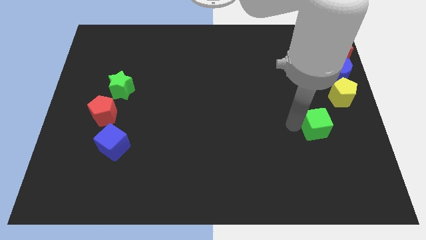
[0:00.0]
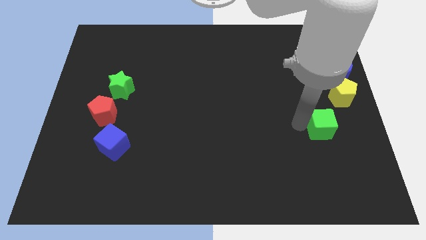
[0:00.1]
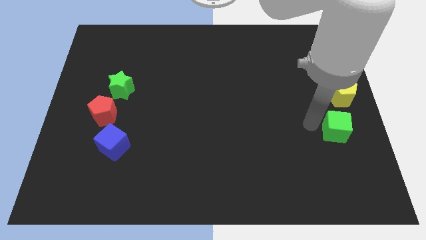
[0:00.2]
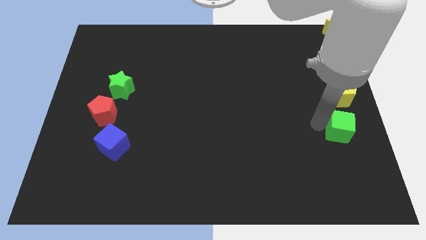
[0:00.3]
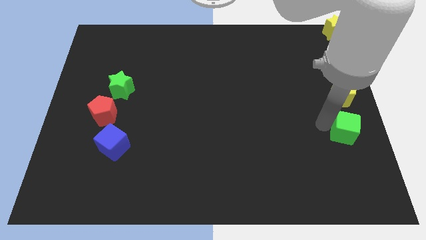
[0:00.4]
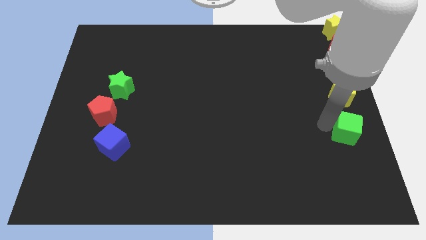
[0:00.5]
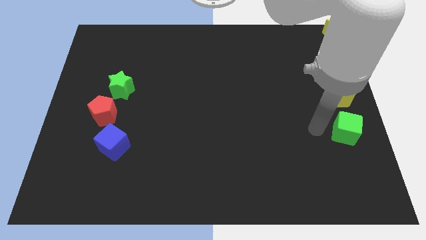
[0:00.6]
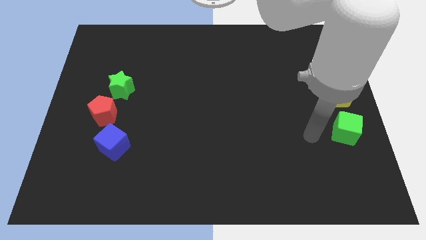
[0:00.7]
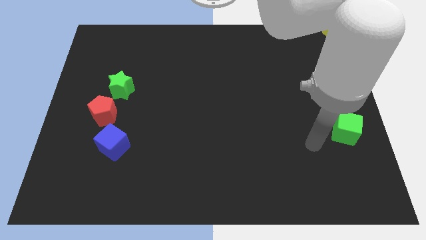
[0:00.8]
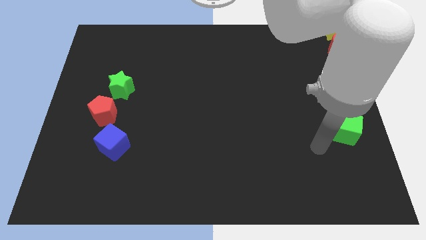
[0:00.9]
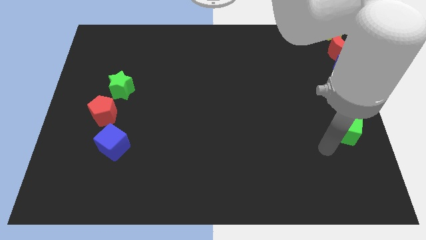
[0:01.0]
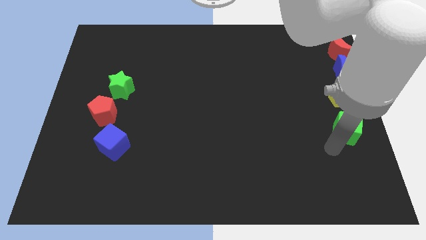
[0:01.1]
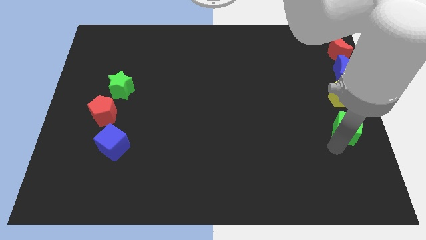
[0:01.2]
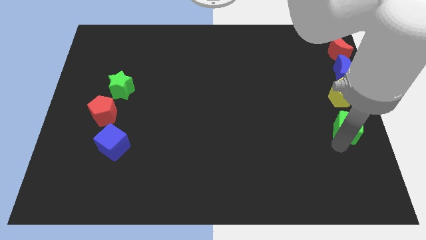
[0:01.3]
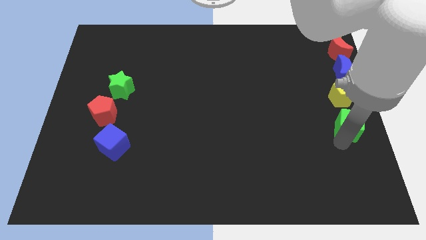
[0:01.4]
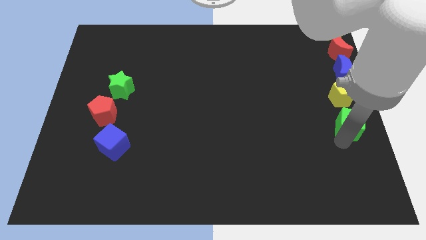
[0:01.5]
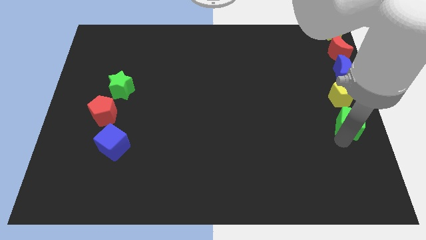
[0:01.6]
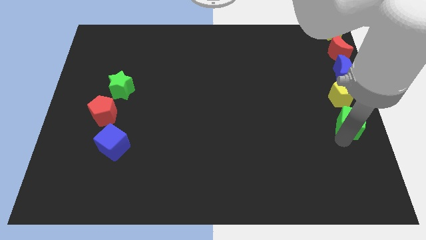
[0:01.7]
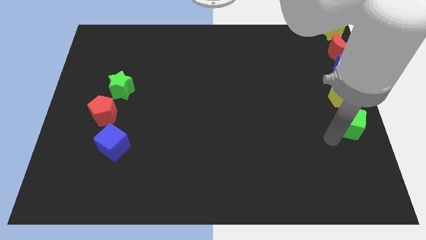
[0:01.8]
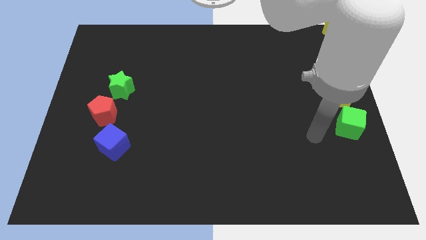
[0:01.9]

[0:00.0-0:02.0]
move the green cube below the yellow pentagon

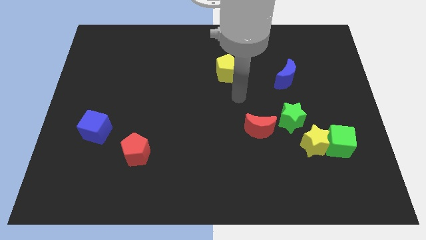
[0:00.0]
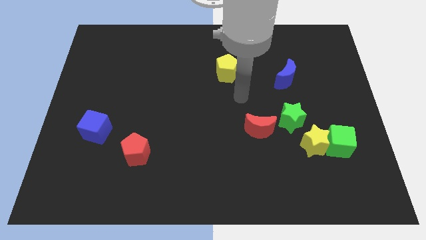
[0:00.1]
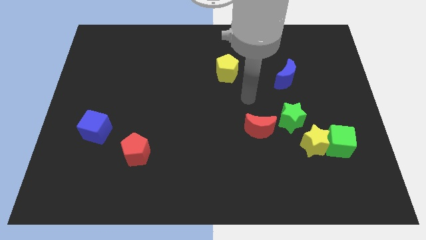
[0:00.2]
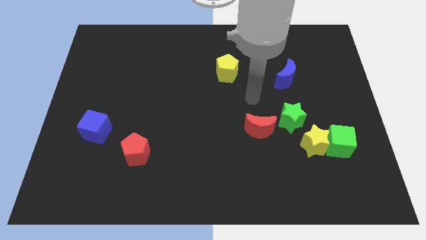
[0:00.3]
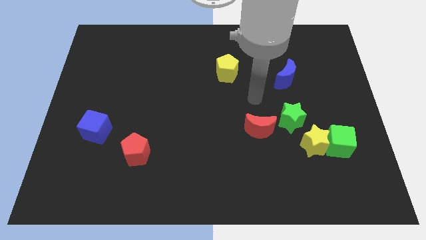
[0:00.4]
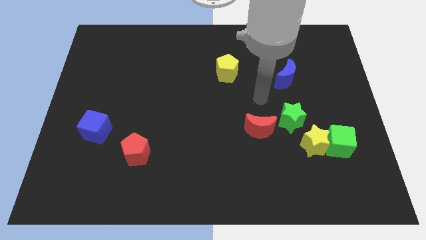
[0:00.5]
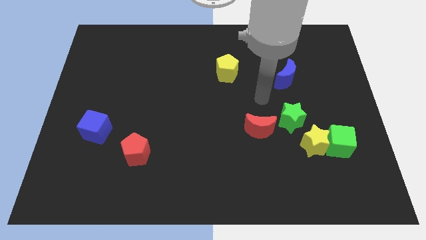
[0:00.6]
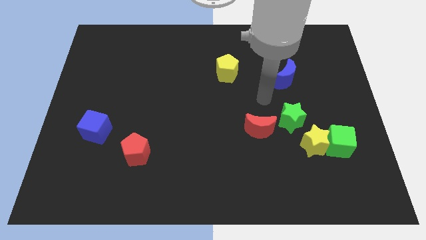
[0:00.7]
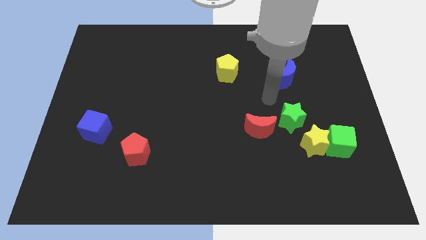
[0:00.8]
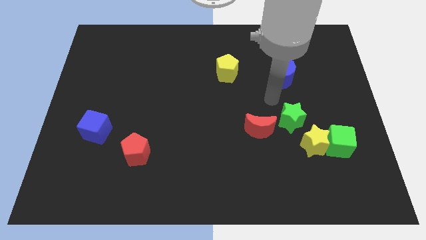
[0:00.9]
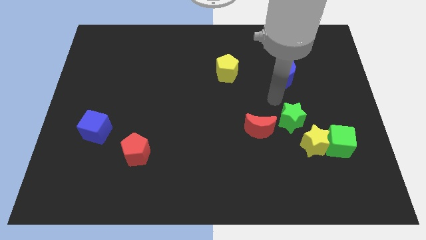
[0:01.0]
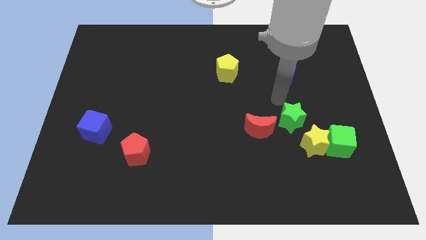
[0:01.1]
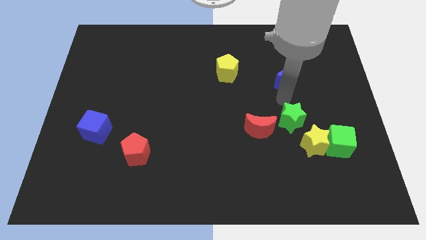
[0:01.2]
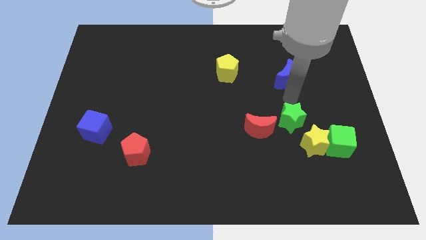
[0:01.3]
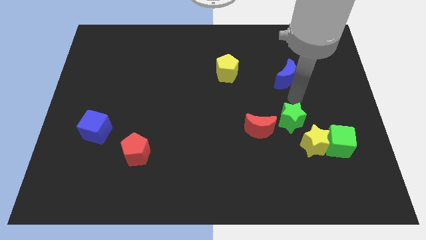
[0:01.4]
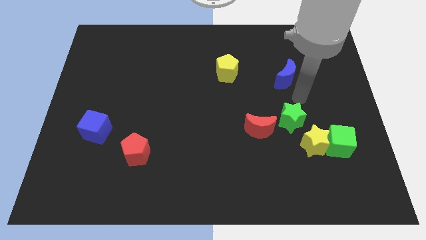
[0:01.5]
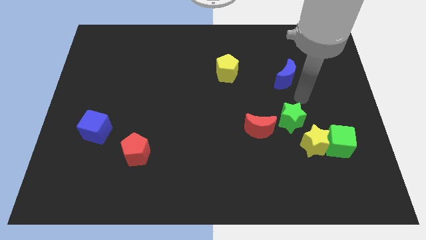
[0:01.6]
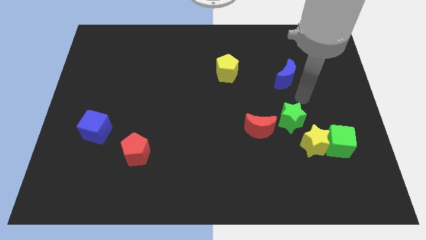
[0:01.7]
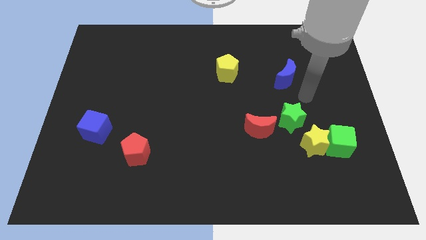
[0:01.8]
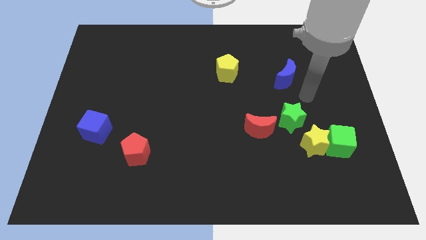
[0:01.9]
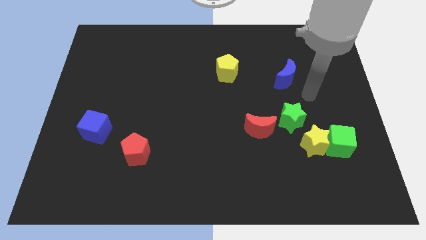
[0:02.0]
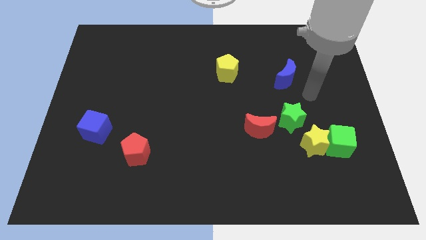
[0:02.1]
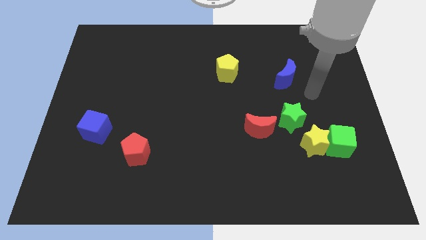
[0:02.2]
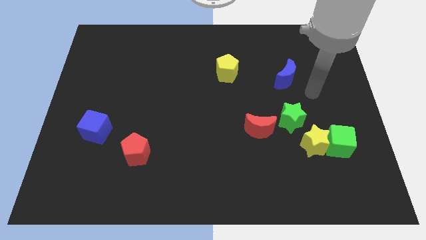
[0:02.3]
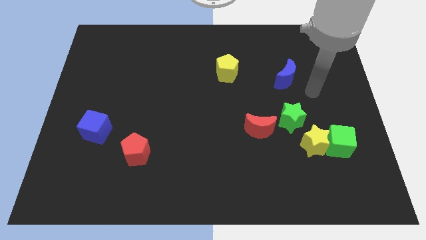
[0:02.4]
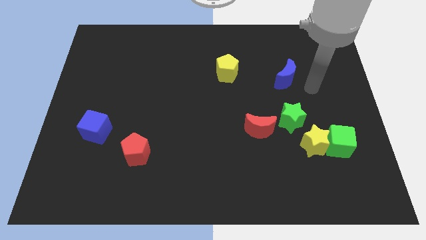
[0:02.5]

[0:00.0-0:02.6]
place your arm diagonally to the top side of the green star

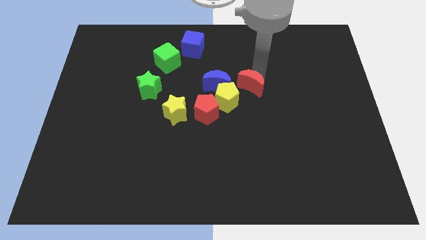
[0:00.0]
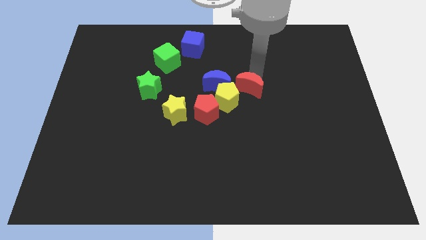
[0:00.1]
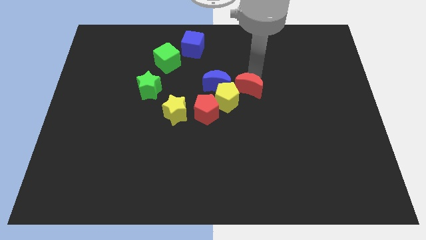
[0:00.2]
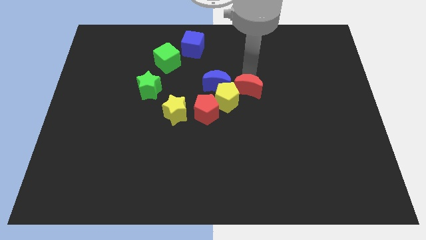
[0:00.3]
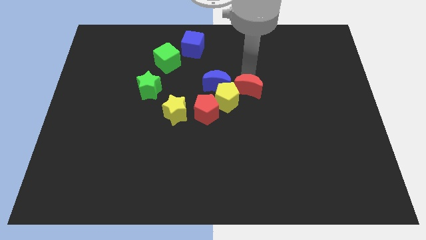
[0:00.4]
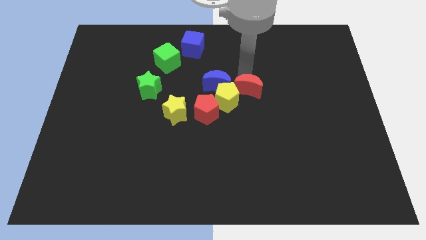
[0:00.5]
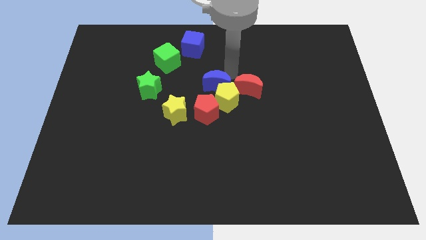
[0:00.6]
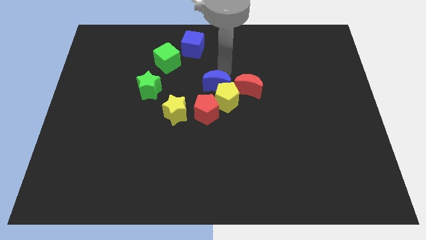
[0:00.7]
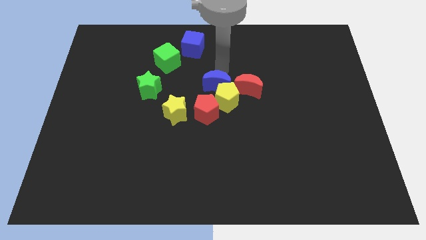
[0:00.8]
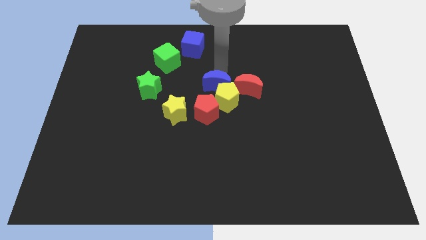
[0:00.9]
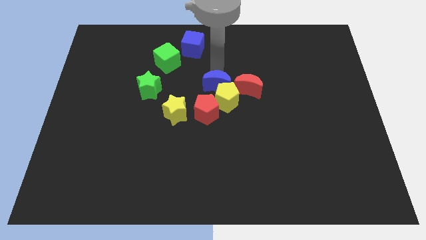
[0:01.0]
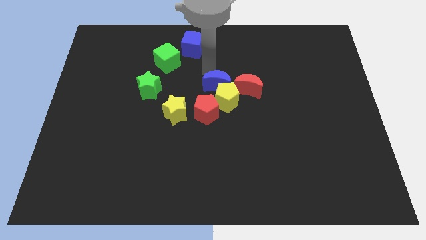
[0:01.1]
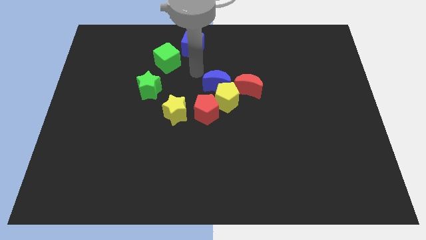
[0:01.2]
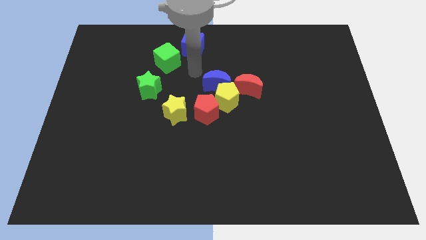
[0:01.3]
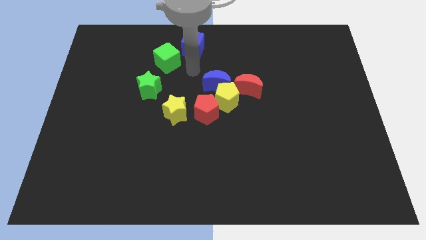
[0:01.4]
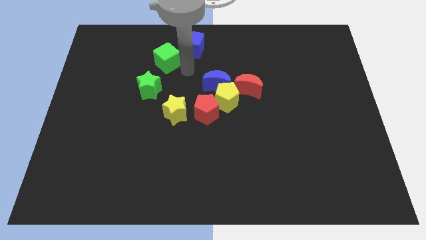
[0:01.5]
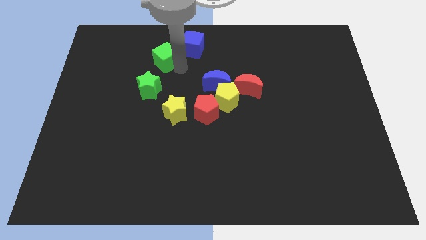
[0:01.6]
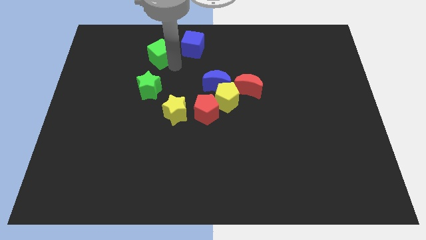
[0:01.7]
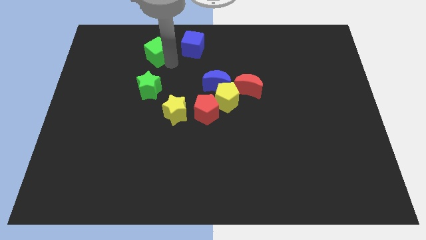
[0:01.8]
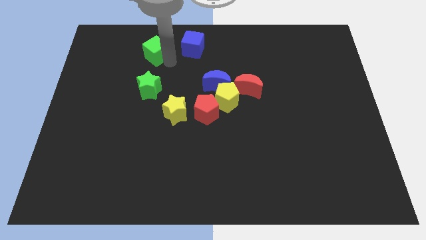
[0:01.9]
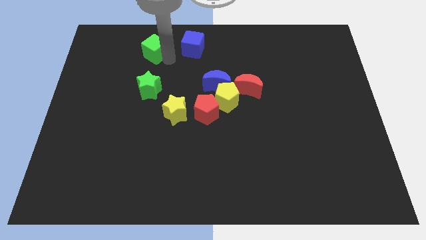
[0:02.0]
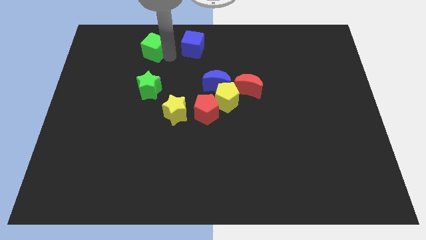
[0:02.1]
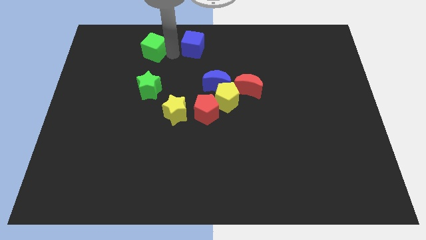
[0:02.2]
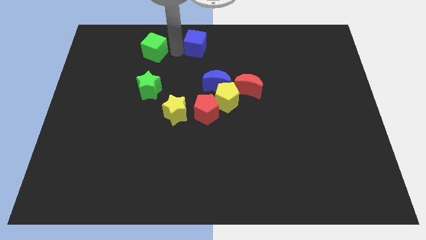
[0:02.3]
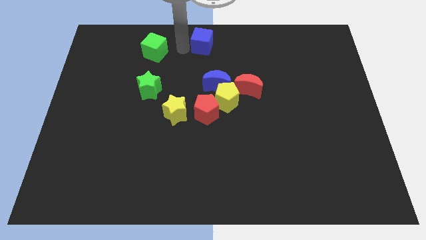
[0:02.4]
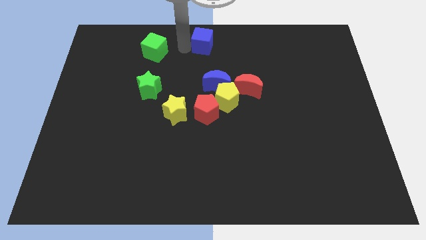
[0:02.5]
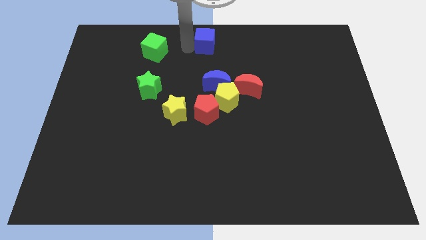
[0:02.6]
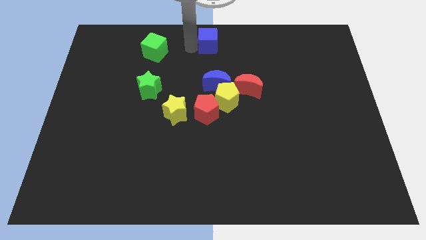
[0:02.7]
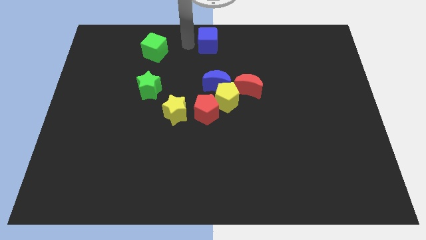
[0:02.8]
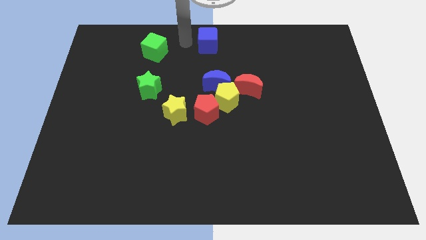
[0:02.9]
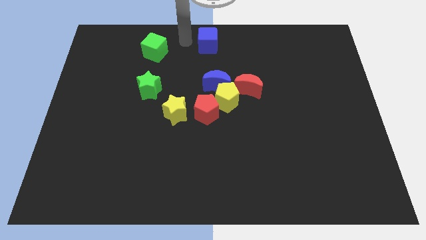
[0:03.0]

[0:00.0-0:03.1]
place the arm in between green and blue cube

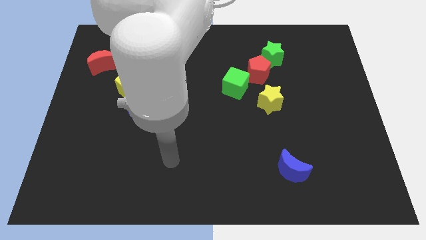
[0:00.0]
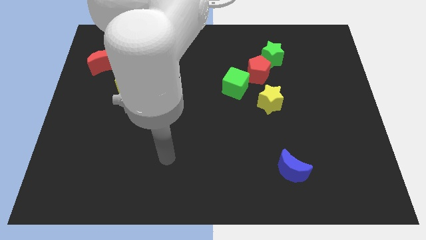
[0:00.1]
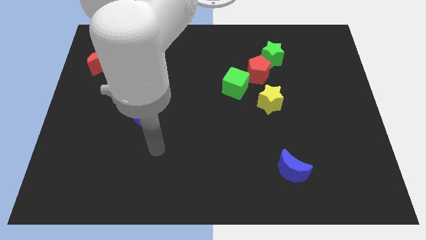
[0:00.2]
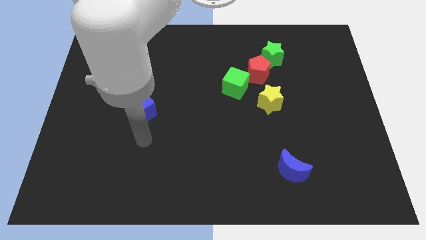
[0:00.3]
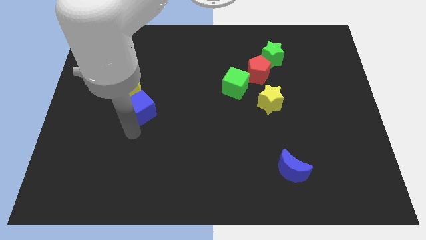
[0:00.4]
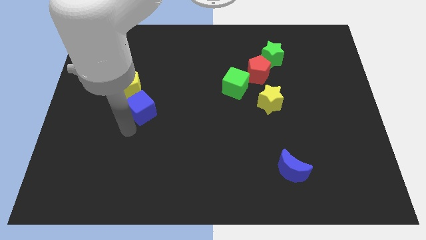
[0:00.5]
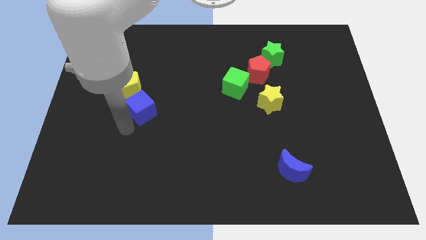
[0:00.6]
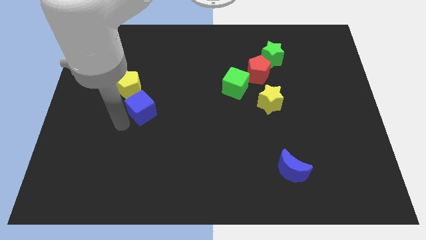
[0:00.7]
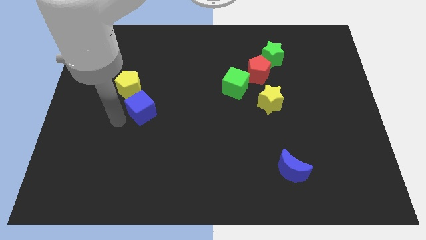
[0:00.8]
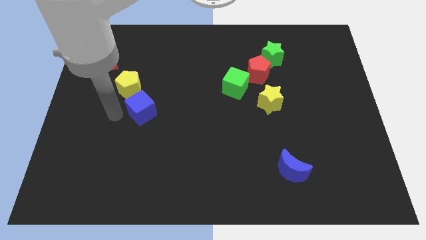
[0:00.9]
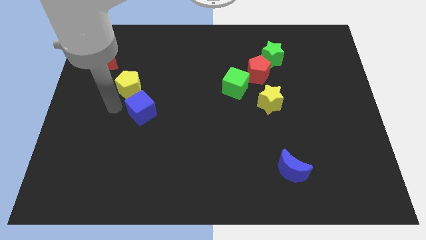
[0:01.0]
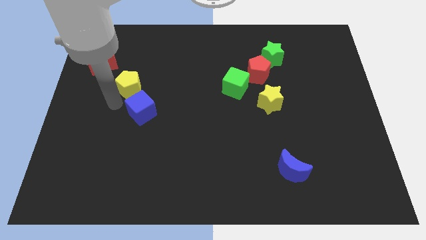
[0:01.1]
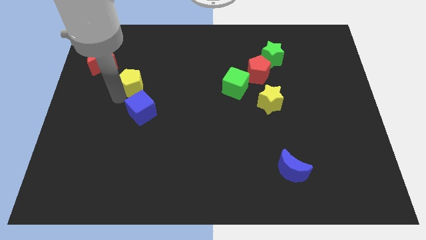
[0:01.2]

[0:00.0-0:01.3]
tap the yellow pentagon
